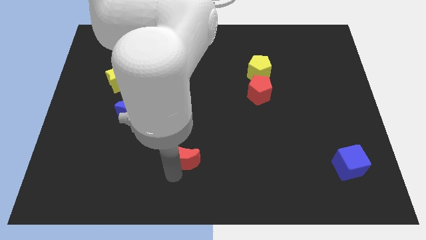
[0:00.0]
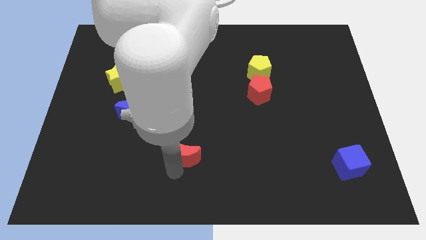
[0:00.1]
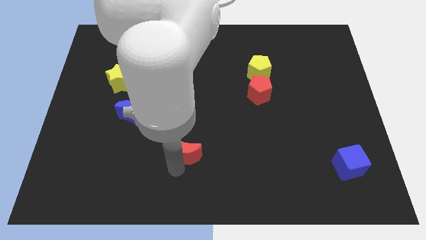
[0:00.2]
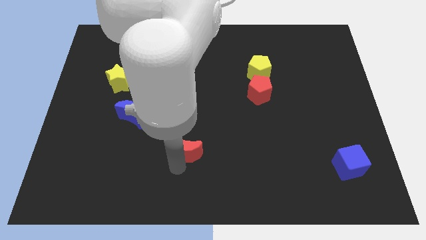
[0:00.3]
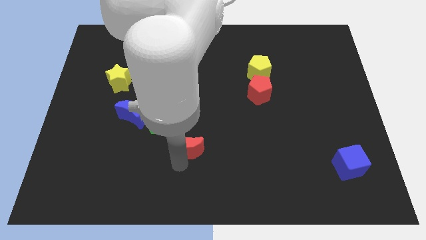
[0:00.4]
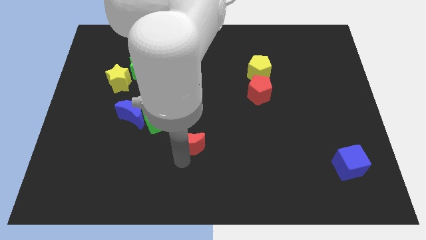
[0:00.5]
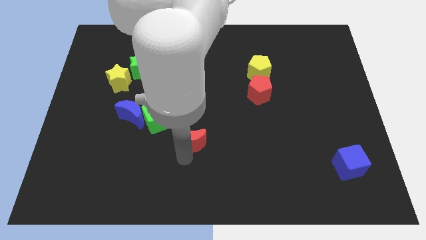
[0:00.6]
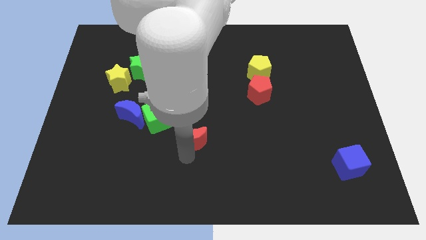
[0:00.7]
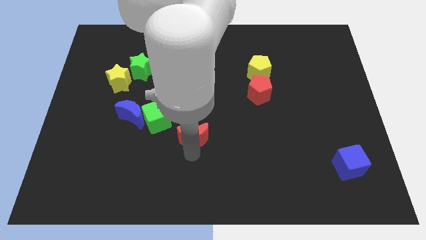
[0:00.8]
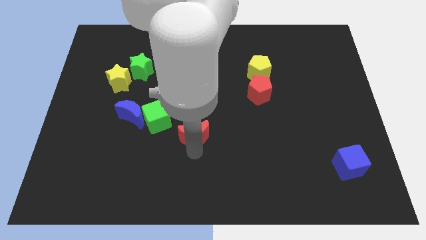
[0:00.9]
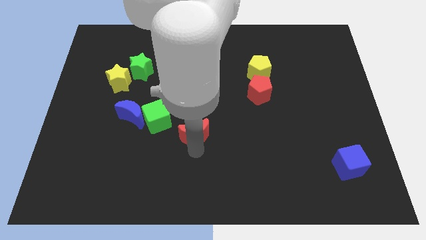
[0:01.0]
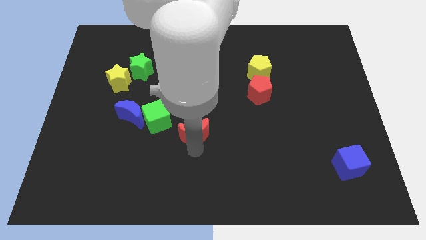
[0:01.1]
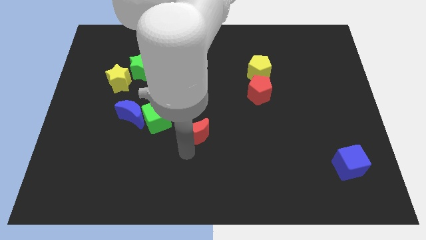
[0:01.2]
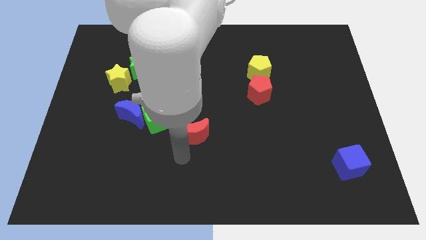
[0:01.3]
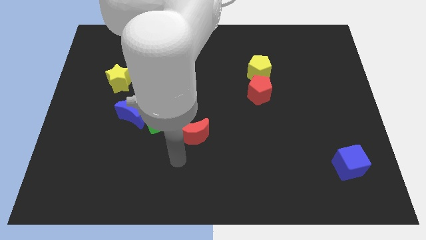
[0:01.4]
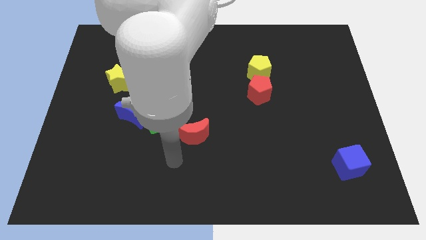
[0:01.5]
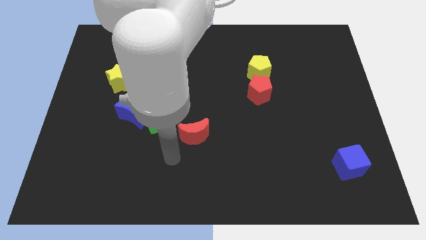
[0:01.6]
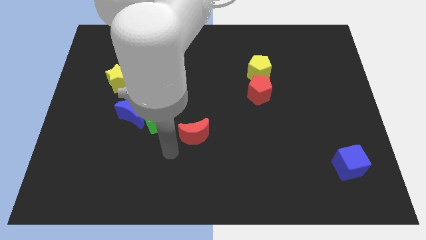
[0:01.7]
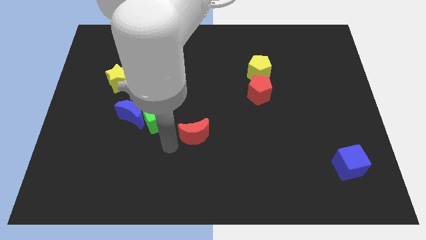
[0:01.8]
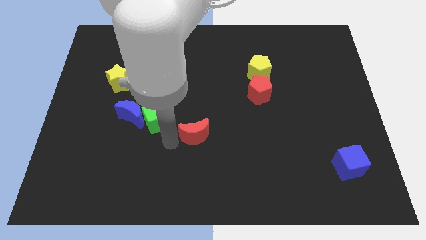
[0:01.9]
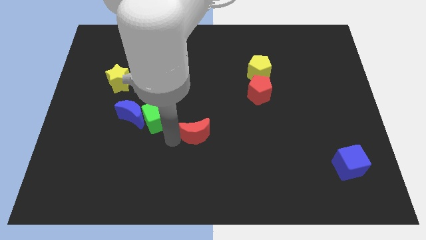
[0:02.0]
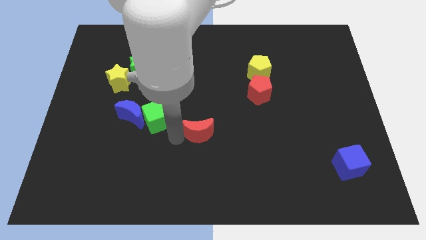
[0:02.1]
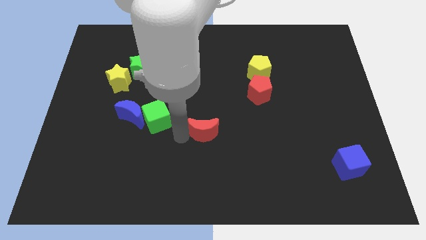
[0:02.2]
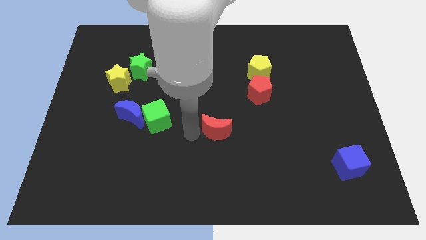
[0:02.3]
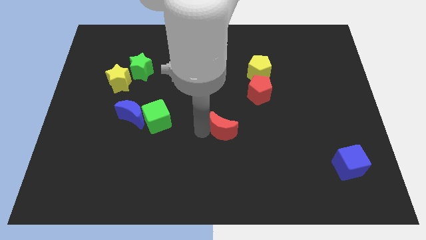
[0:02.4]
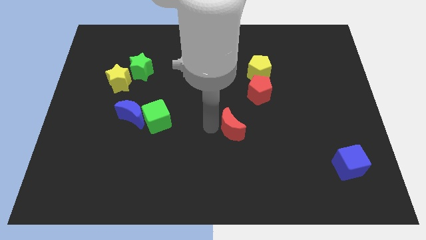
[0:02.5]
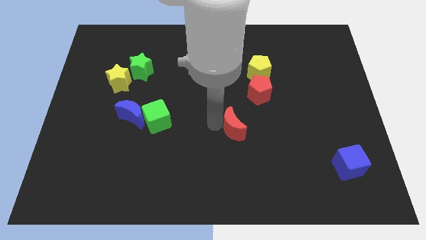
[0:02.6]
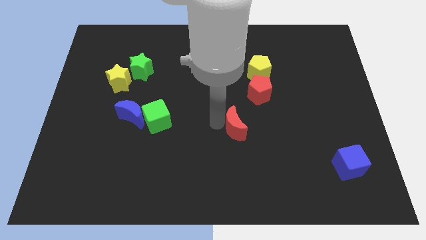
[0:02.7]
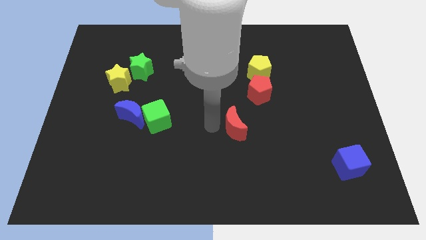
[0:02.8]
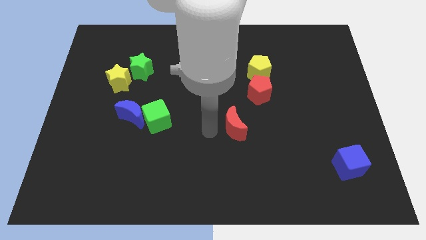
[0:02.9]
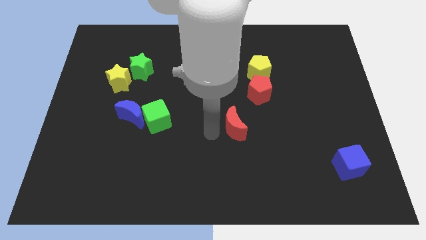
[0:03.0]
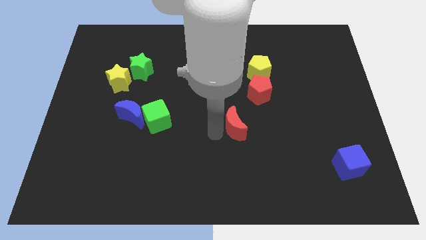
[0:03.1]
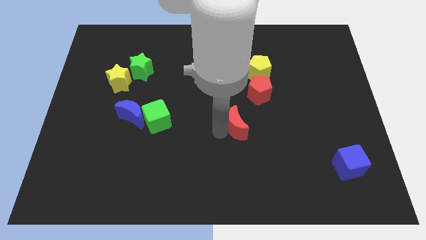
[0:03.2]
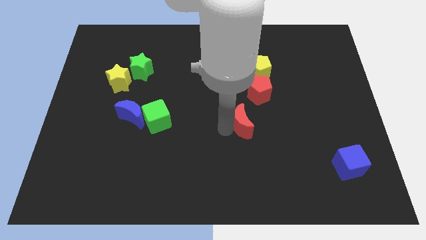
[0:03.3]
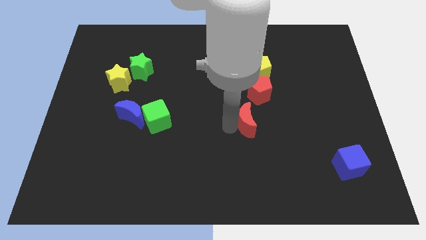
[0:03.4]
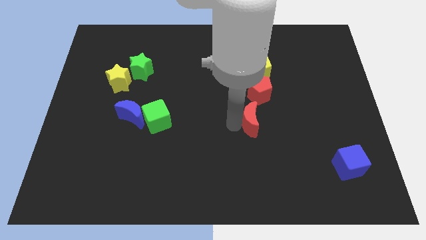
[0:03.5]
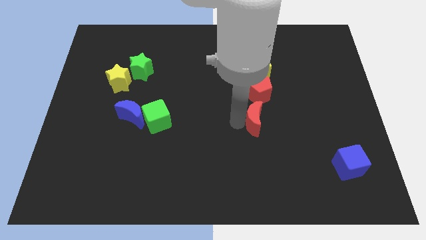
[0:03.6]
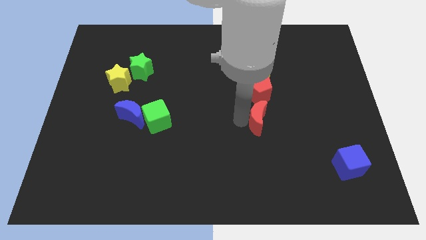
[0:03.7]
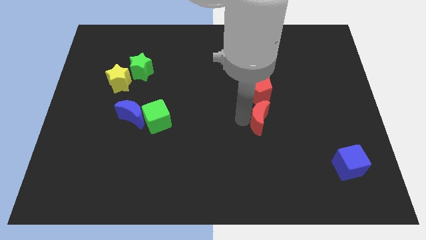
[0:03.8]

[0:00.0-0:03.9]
place the red crescent at the bottom of red pentagon

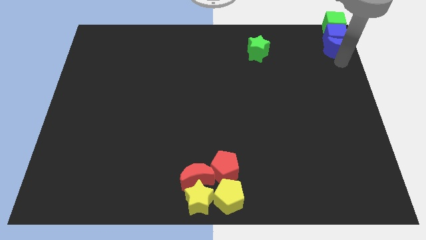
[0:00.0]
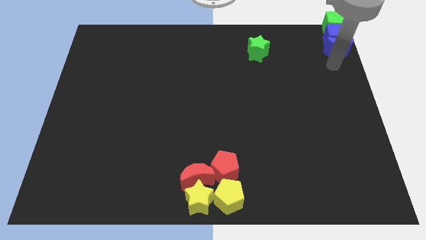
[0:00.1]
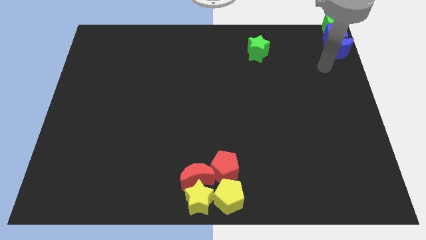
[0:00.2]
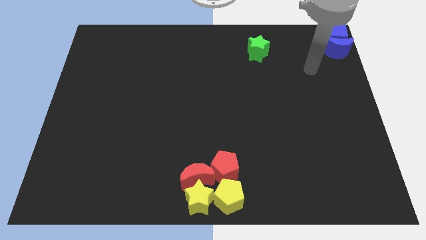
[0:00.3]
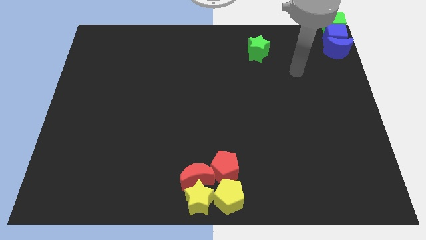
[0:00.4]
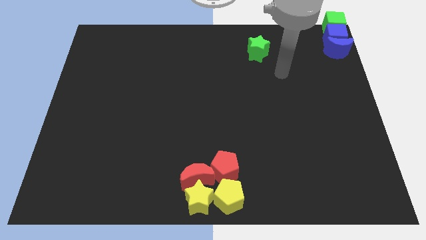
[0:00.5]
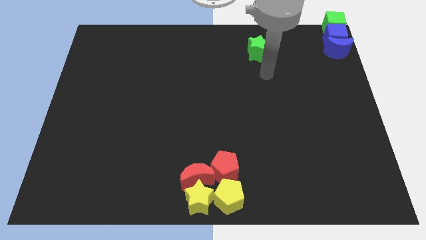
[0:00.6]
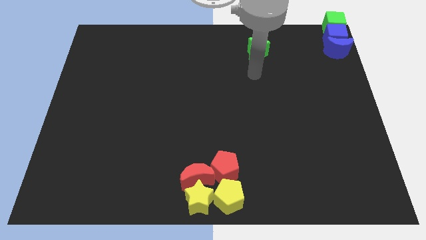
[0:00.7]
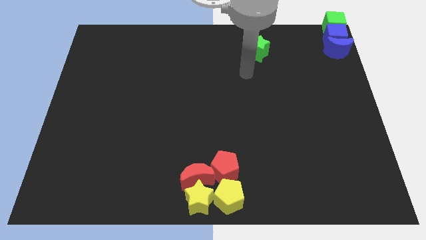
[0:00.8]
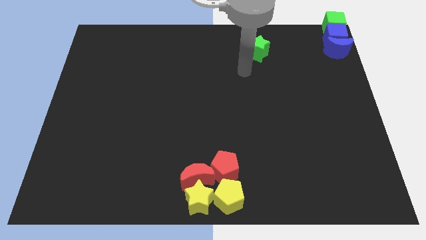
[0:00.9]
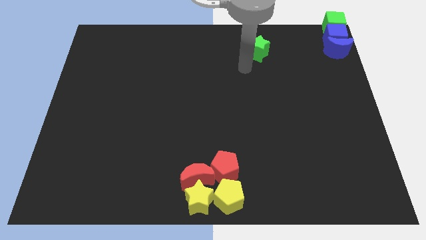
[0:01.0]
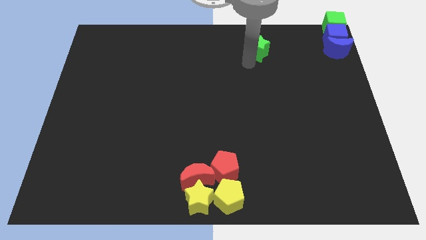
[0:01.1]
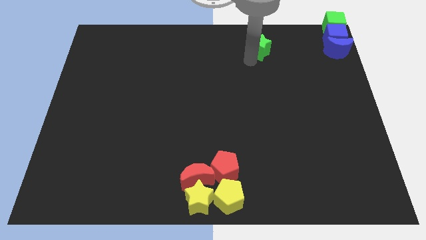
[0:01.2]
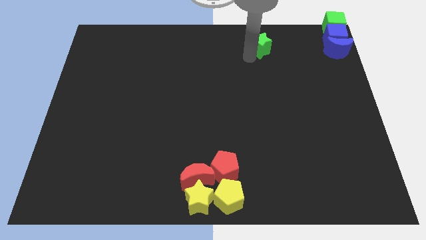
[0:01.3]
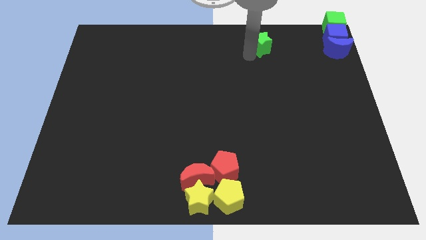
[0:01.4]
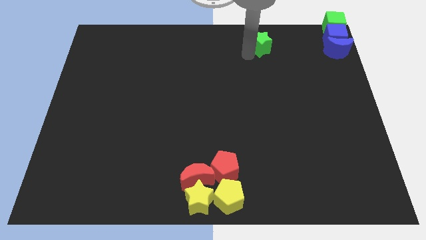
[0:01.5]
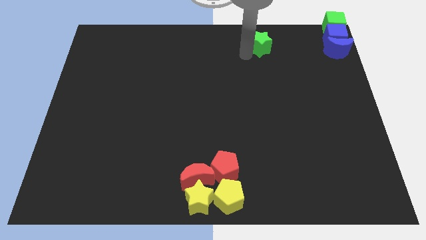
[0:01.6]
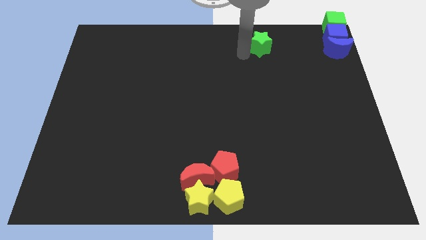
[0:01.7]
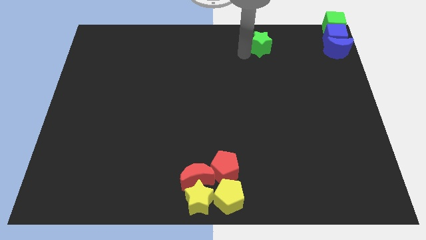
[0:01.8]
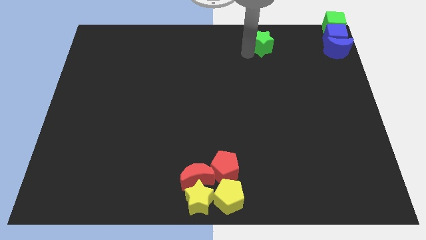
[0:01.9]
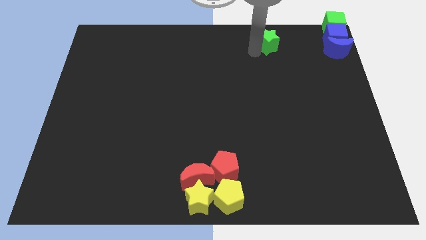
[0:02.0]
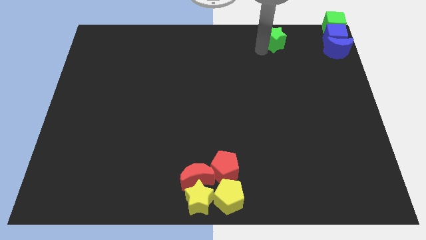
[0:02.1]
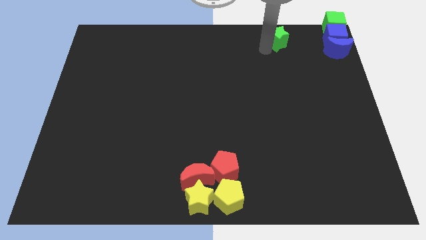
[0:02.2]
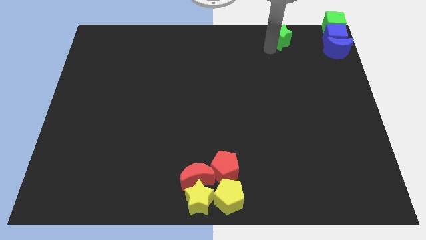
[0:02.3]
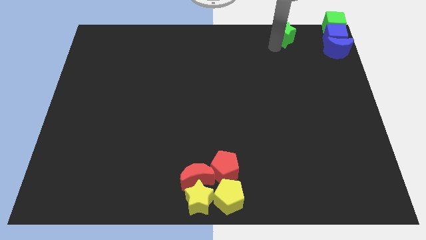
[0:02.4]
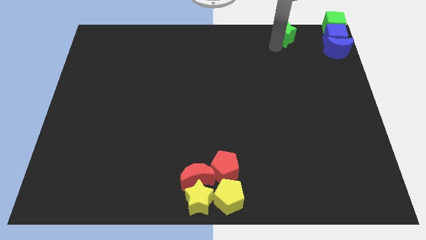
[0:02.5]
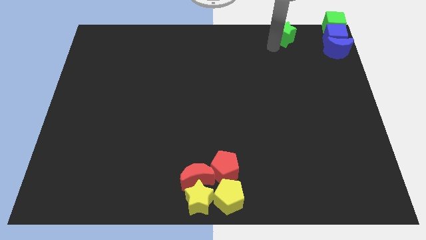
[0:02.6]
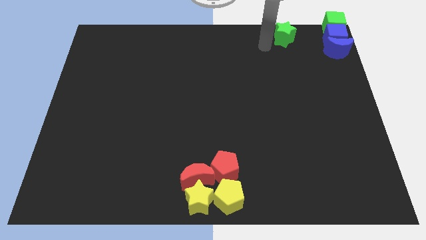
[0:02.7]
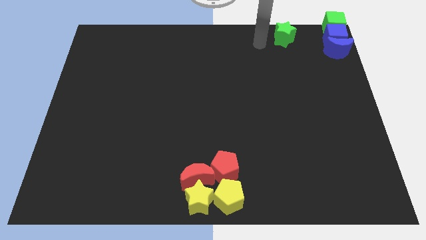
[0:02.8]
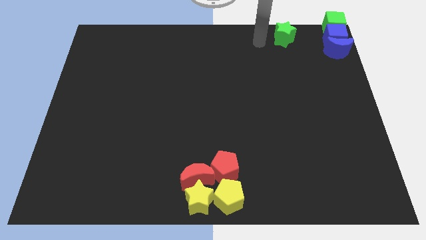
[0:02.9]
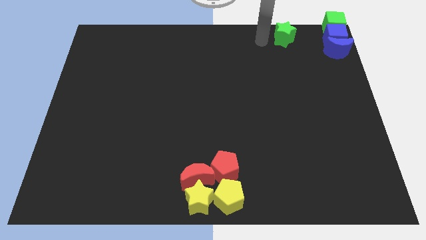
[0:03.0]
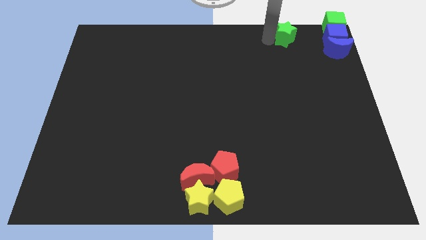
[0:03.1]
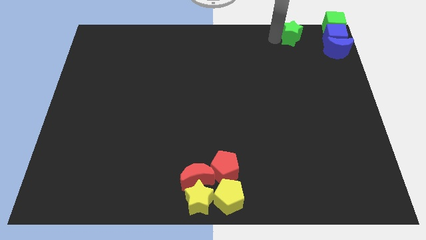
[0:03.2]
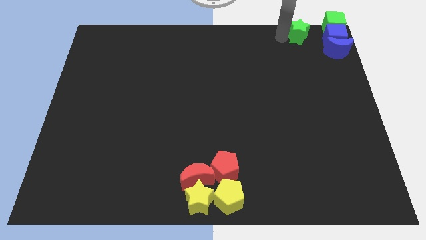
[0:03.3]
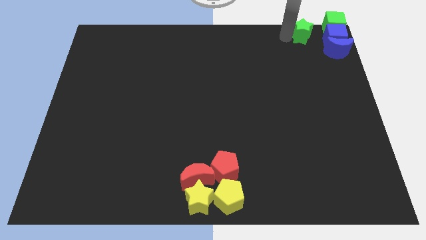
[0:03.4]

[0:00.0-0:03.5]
move the green star parallel to the left of the blue cube

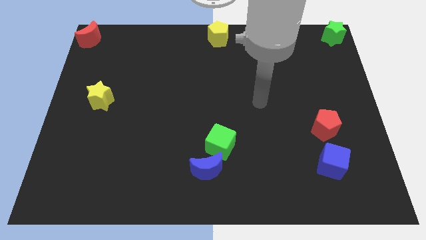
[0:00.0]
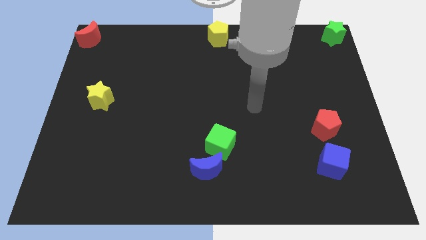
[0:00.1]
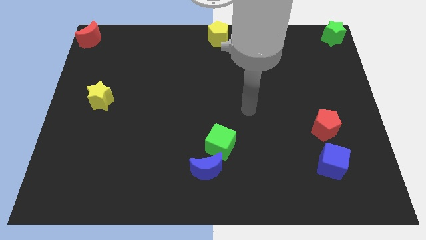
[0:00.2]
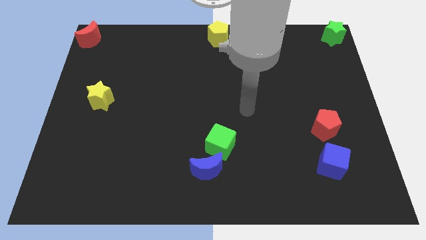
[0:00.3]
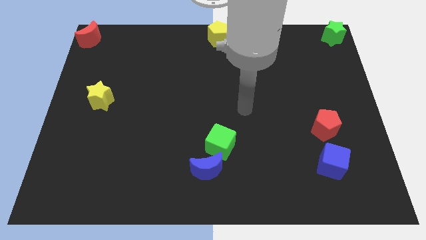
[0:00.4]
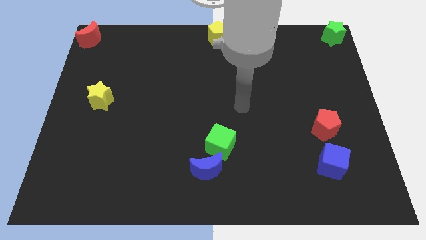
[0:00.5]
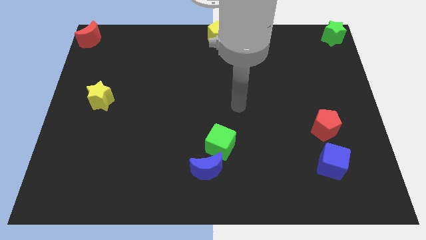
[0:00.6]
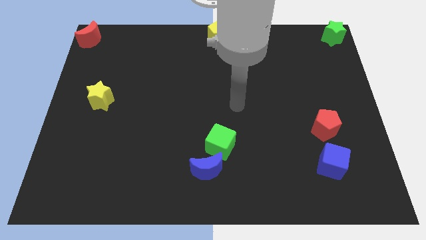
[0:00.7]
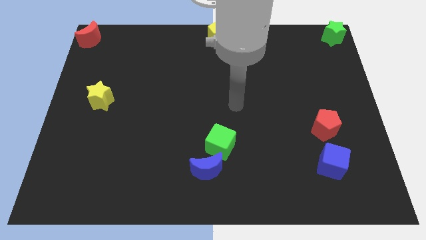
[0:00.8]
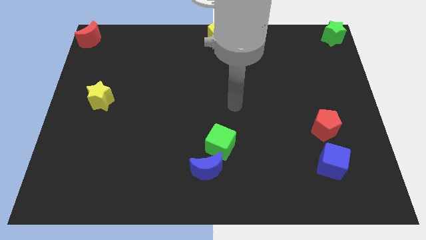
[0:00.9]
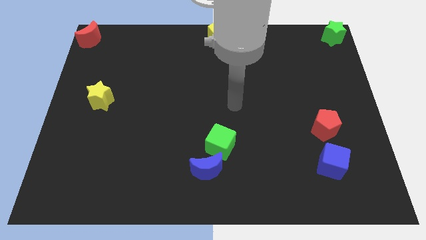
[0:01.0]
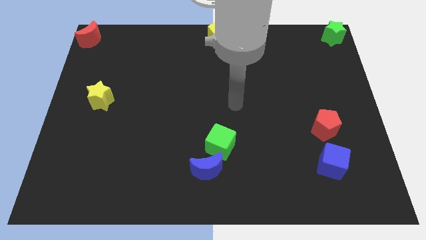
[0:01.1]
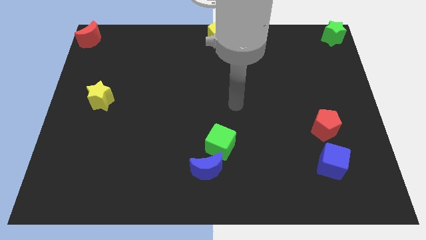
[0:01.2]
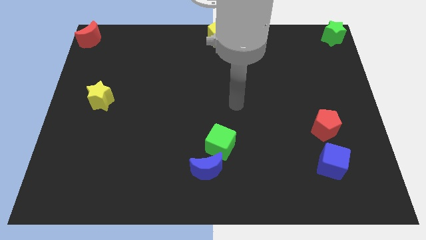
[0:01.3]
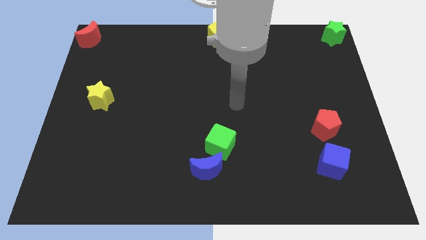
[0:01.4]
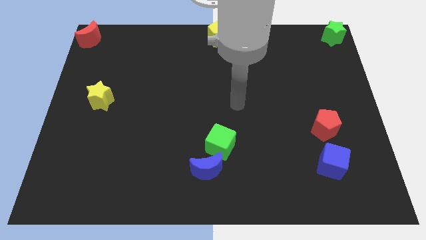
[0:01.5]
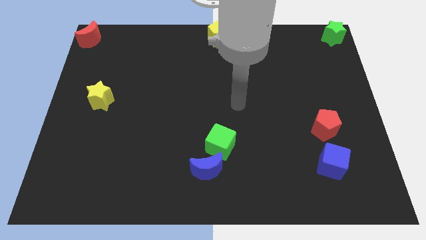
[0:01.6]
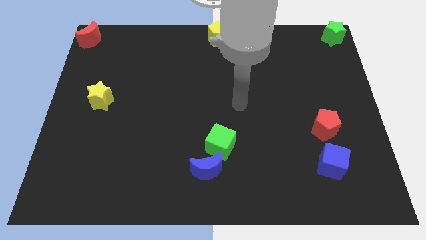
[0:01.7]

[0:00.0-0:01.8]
move your arm to the center
